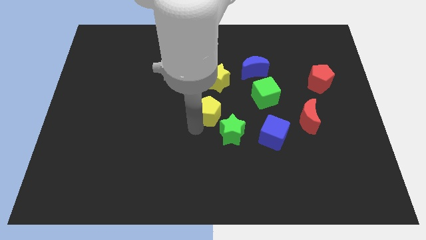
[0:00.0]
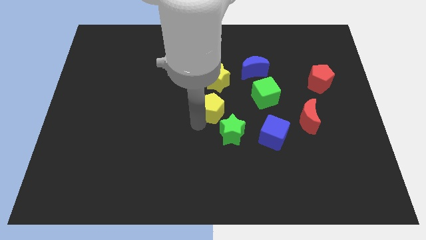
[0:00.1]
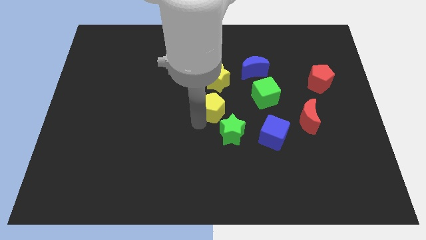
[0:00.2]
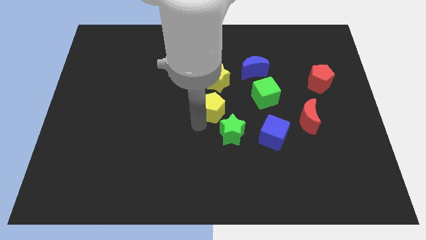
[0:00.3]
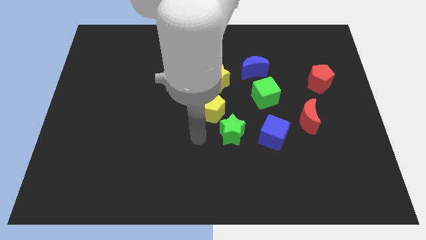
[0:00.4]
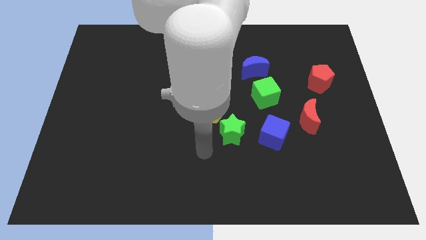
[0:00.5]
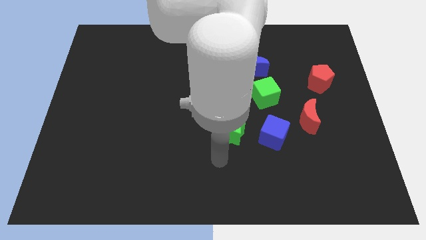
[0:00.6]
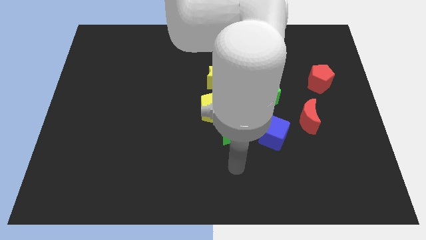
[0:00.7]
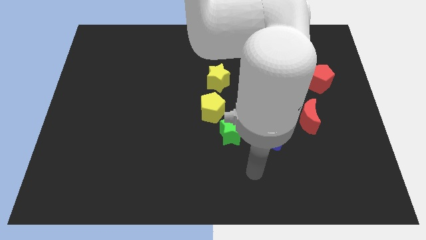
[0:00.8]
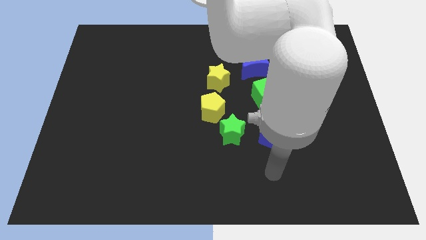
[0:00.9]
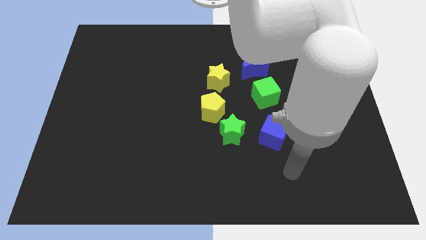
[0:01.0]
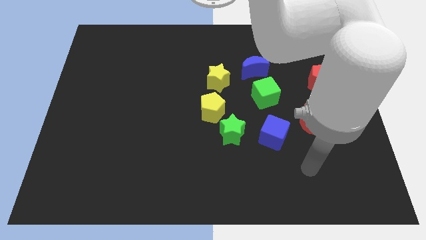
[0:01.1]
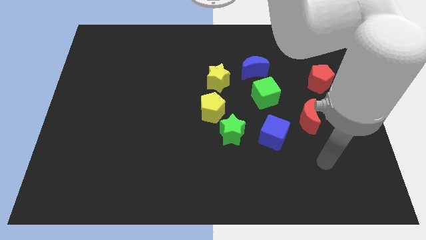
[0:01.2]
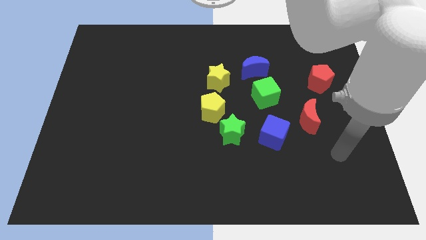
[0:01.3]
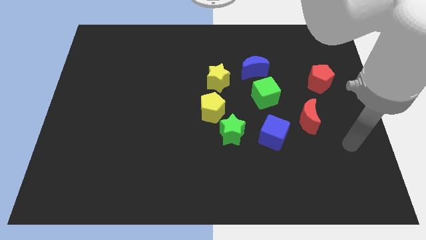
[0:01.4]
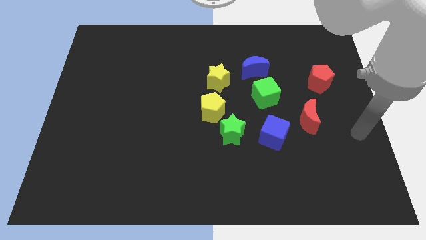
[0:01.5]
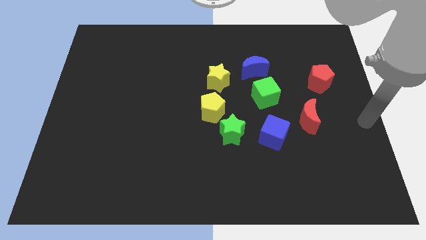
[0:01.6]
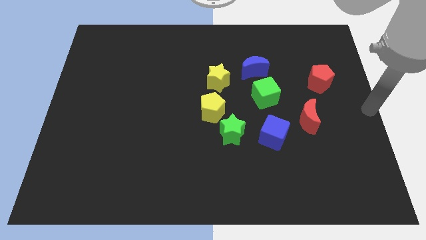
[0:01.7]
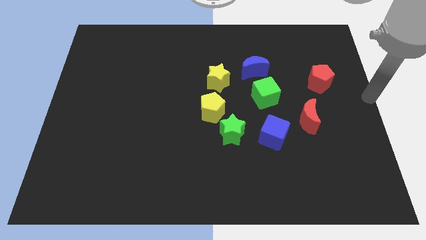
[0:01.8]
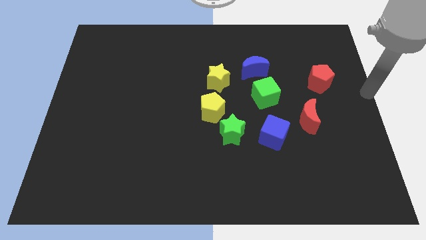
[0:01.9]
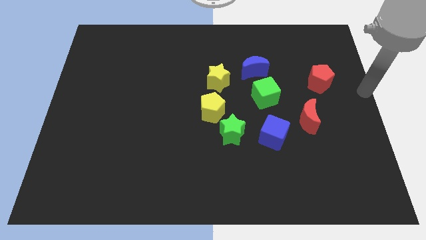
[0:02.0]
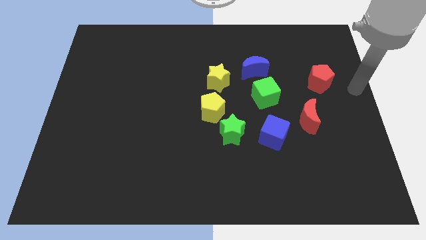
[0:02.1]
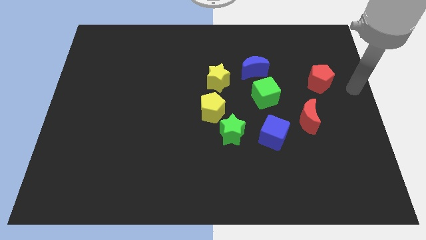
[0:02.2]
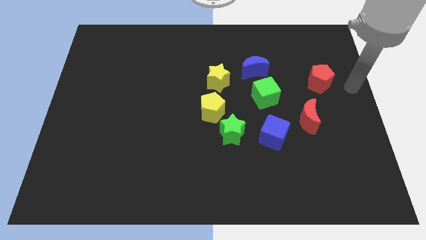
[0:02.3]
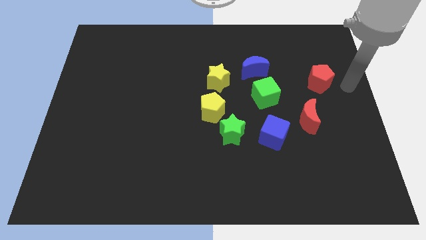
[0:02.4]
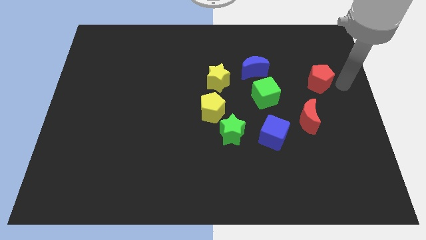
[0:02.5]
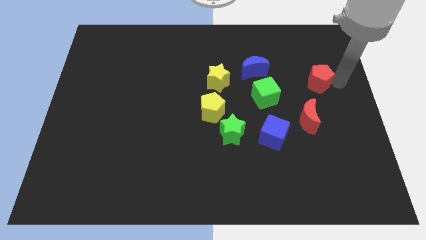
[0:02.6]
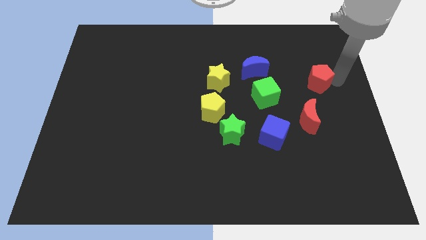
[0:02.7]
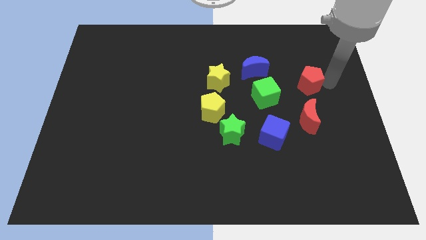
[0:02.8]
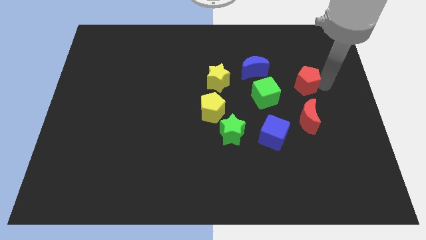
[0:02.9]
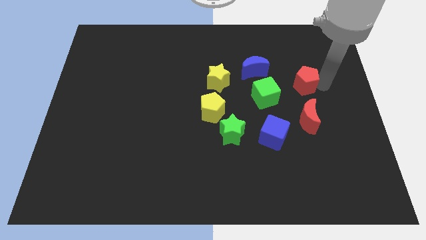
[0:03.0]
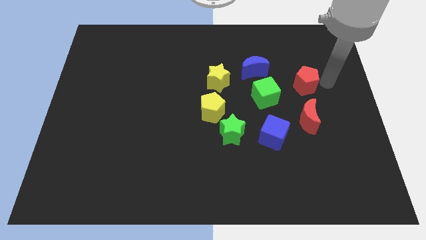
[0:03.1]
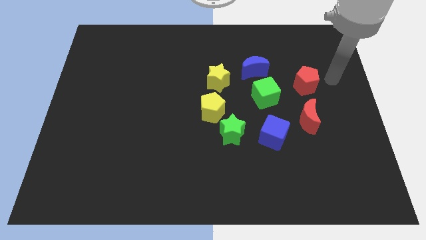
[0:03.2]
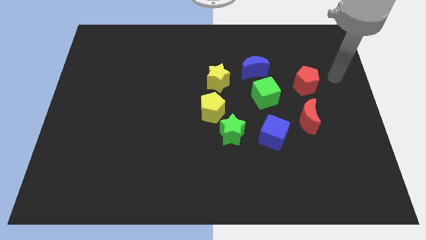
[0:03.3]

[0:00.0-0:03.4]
slide red pentagon above red crescent

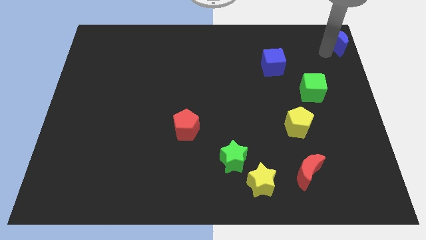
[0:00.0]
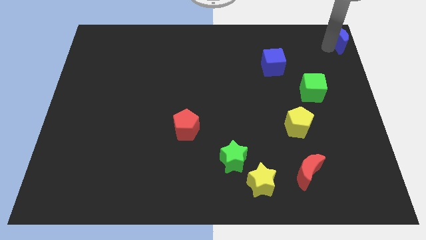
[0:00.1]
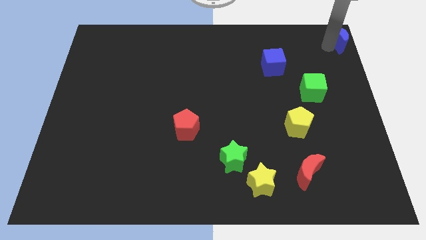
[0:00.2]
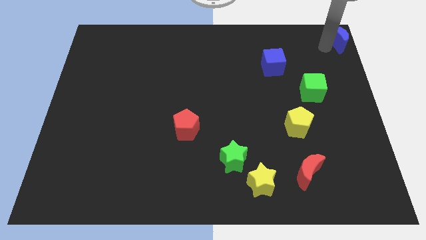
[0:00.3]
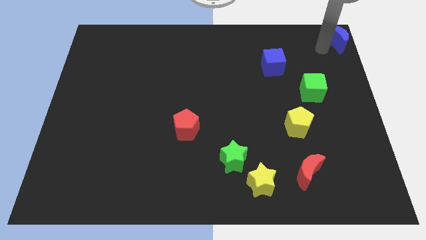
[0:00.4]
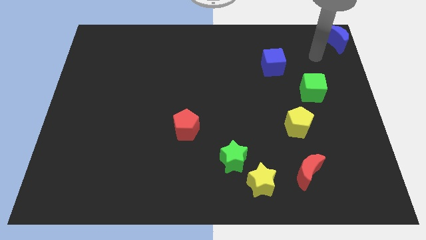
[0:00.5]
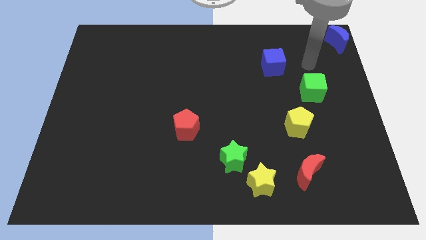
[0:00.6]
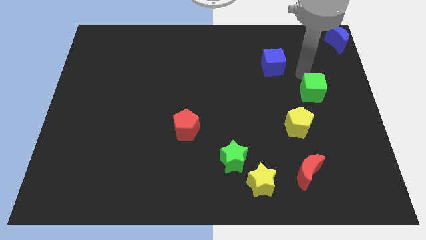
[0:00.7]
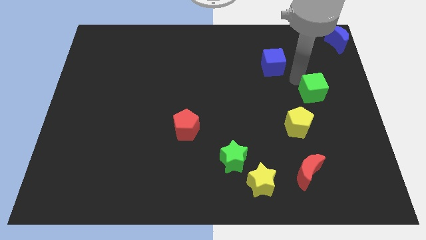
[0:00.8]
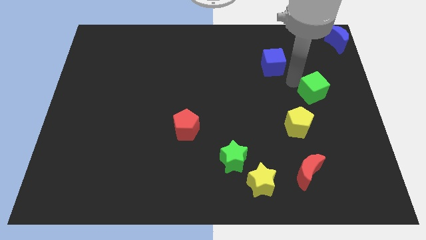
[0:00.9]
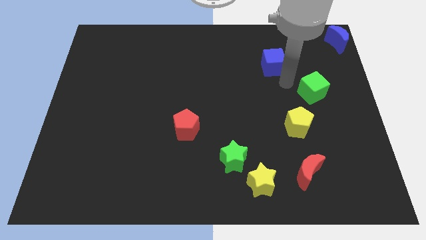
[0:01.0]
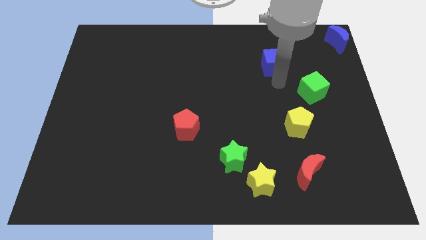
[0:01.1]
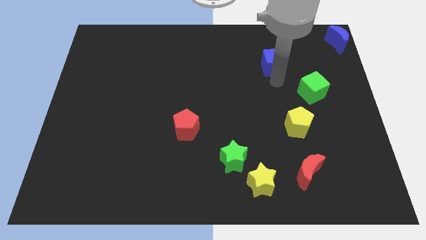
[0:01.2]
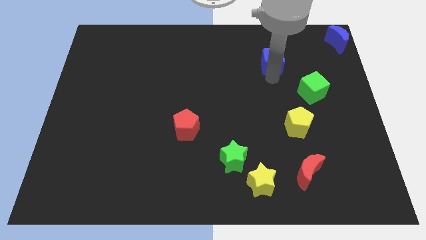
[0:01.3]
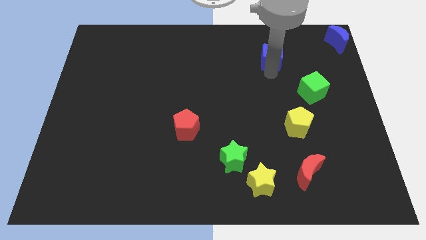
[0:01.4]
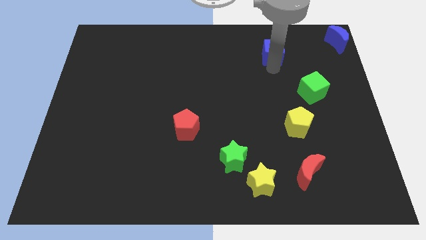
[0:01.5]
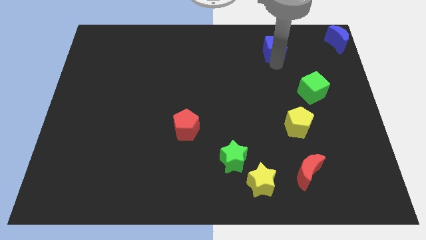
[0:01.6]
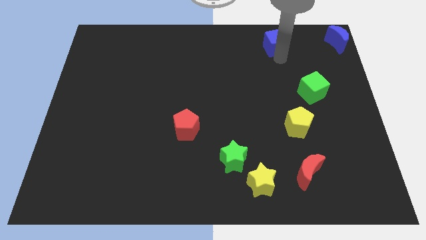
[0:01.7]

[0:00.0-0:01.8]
slightly push the blue cube upwards

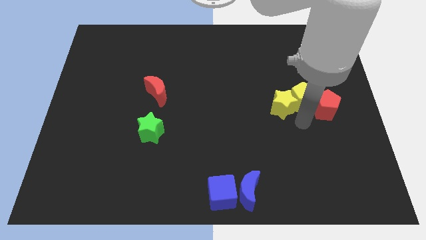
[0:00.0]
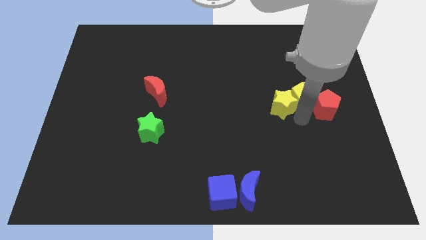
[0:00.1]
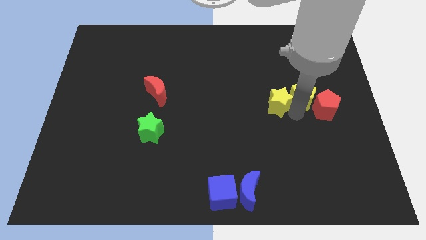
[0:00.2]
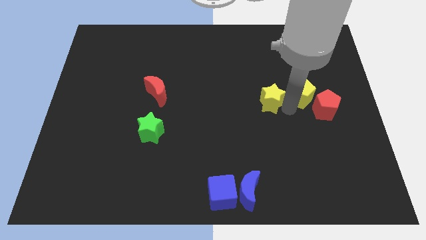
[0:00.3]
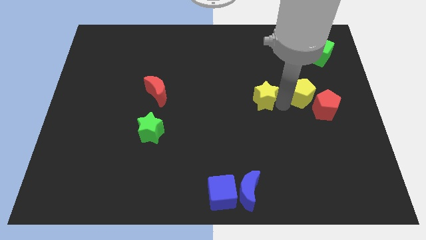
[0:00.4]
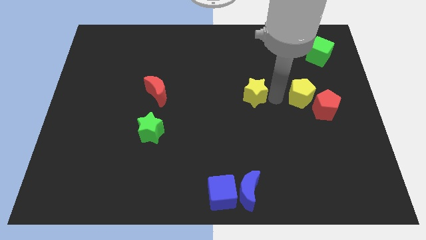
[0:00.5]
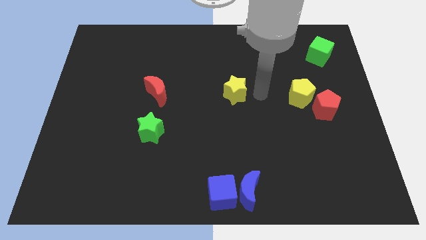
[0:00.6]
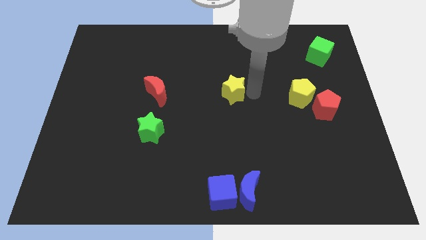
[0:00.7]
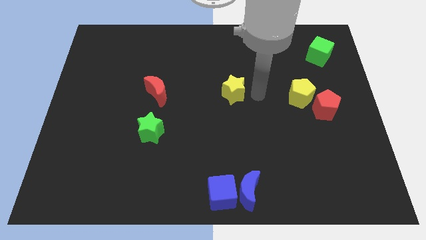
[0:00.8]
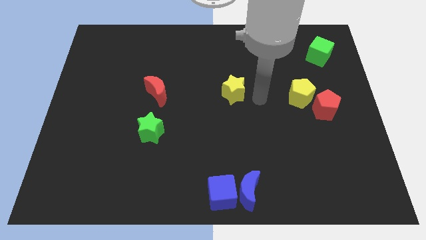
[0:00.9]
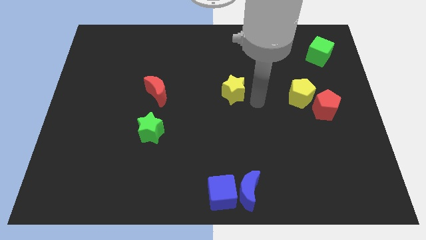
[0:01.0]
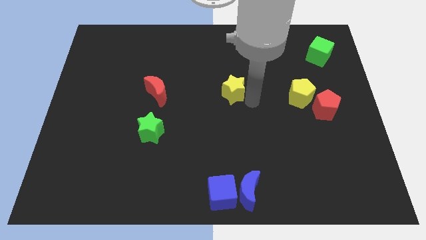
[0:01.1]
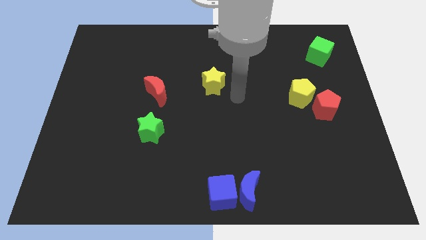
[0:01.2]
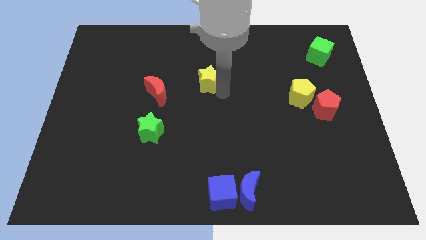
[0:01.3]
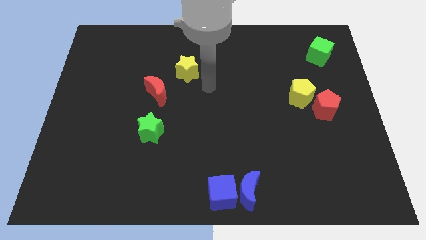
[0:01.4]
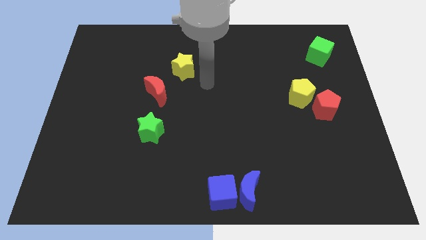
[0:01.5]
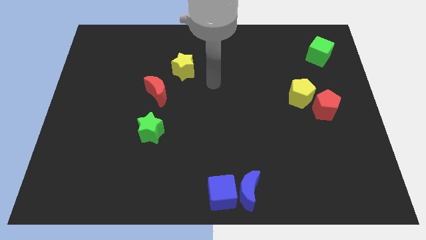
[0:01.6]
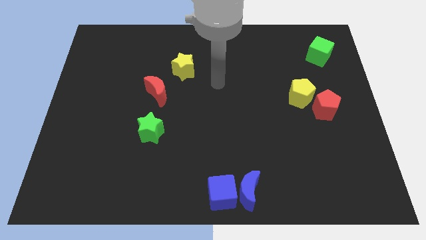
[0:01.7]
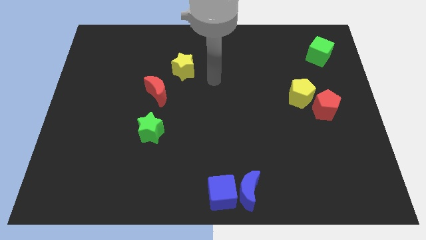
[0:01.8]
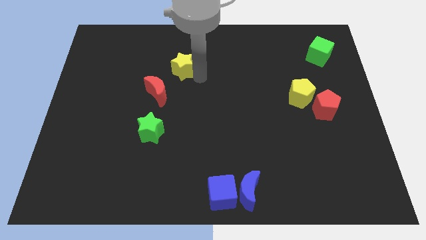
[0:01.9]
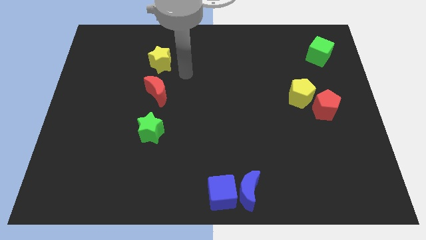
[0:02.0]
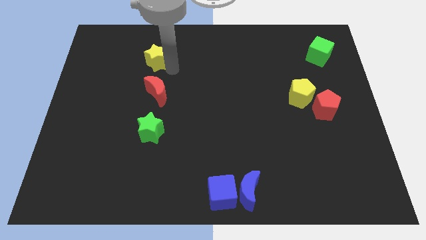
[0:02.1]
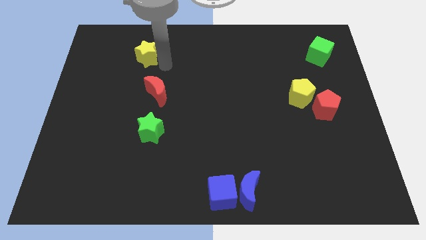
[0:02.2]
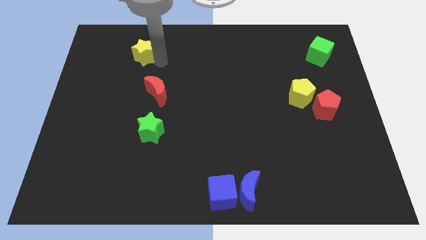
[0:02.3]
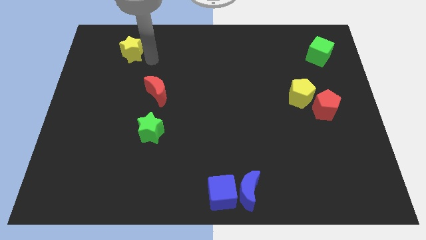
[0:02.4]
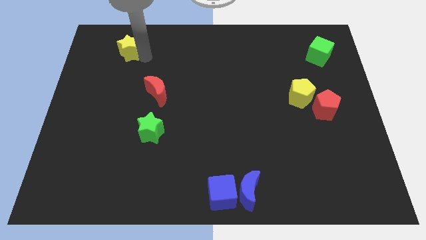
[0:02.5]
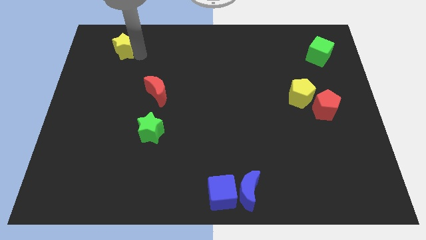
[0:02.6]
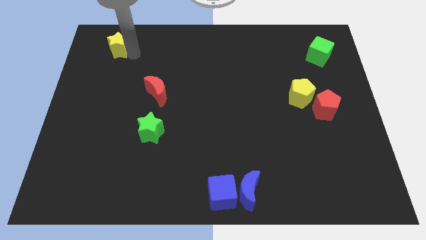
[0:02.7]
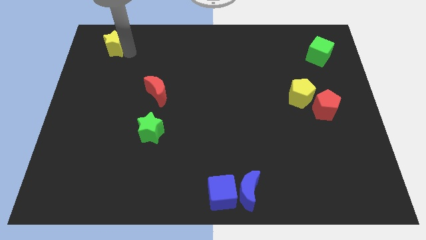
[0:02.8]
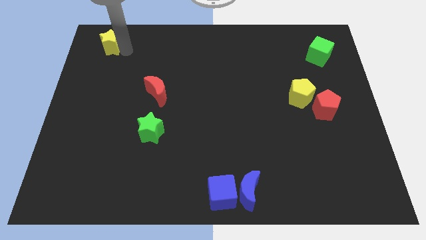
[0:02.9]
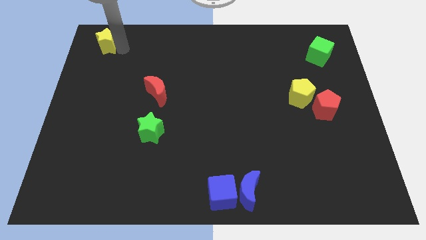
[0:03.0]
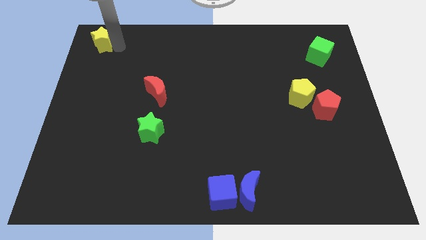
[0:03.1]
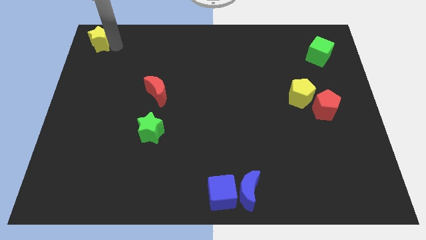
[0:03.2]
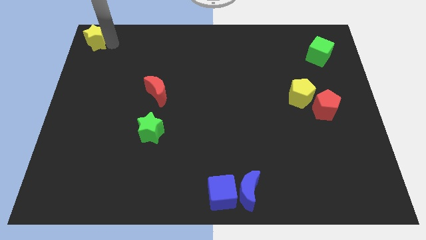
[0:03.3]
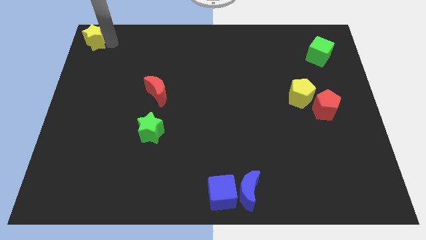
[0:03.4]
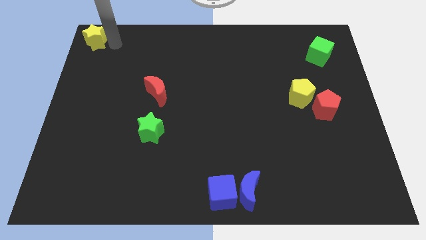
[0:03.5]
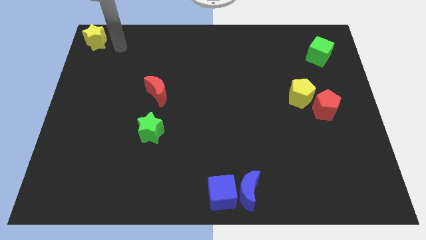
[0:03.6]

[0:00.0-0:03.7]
place the yellow star to the top left
